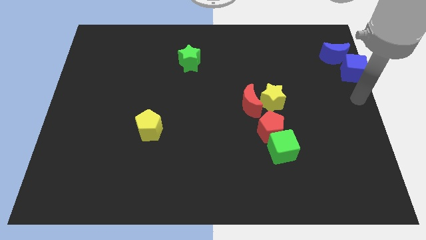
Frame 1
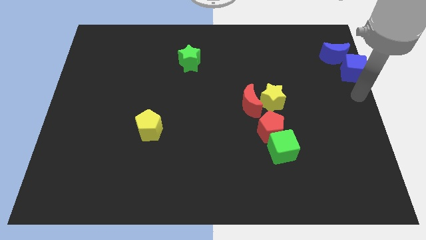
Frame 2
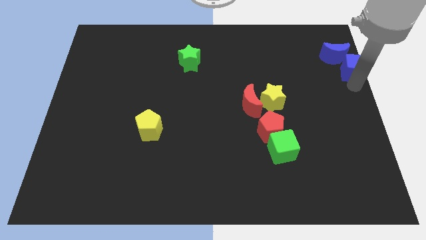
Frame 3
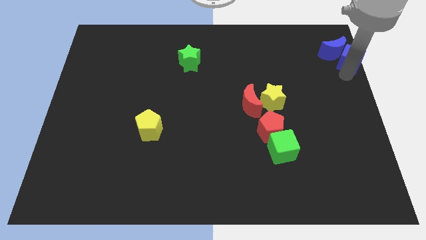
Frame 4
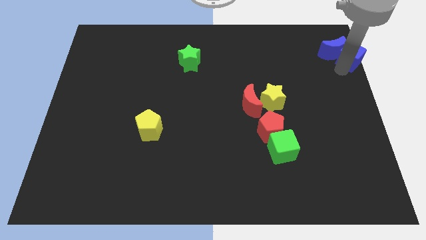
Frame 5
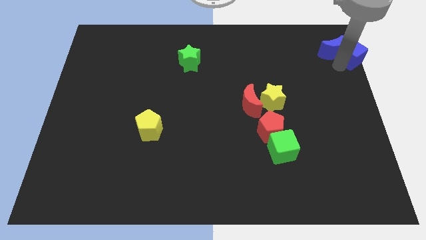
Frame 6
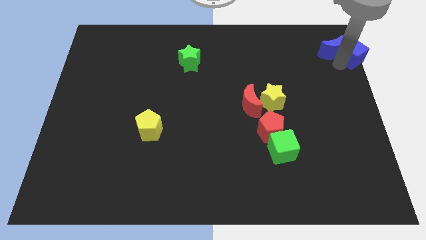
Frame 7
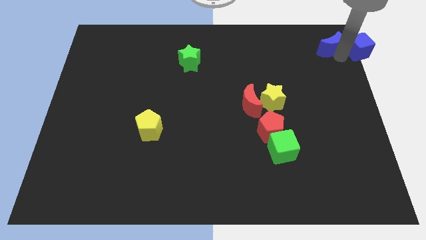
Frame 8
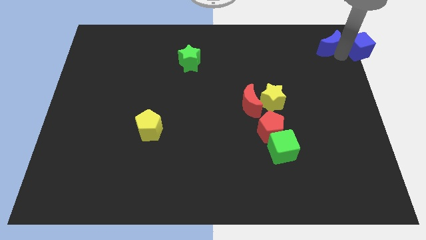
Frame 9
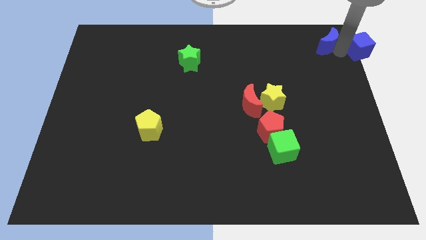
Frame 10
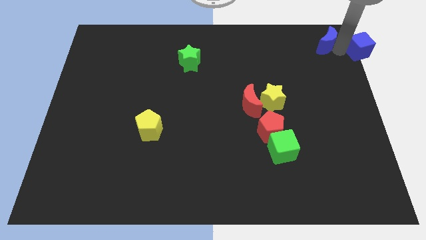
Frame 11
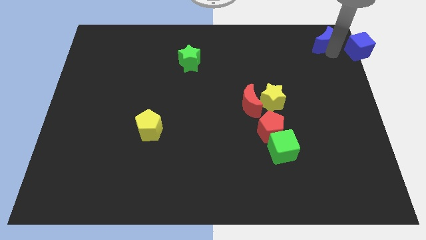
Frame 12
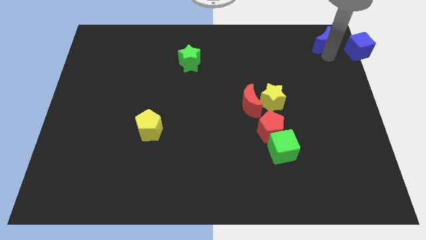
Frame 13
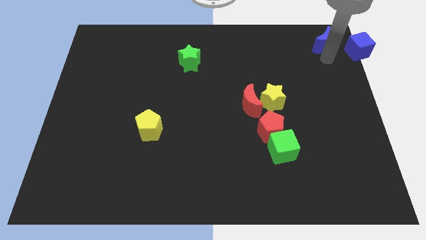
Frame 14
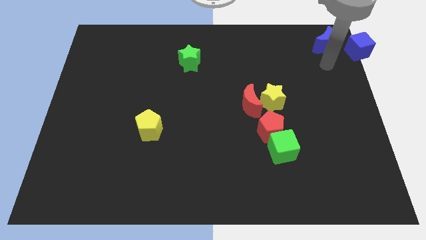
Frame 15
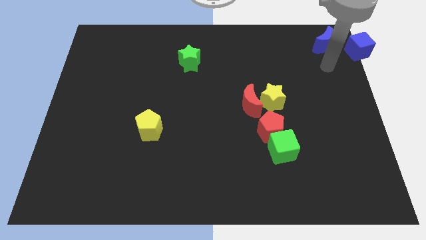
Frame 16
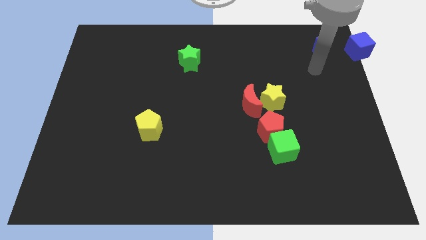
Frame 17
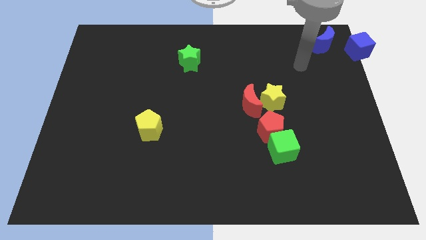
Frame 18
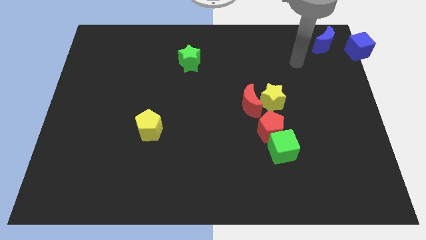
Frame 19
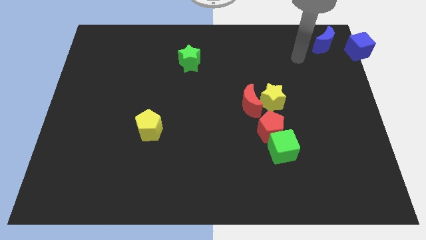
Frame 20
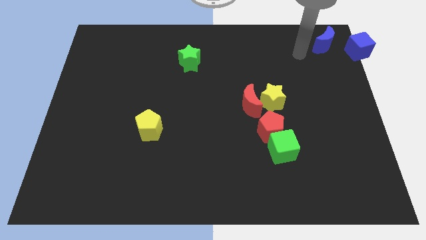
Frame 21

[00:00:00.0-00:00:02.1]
separate the blue moon from the blue cube

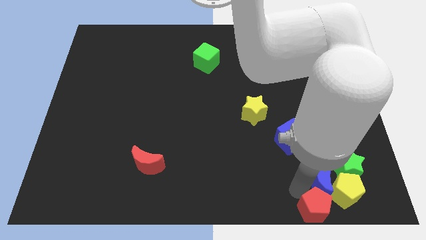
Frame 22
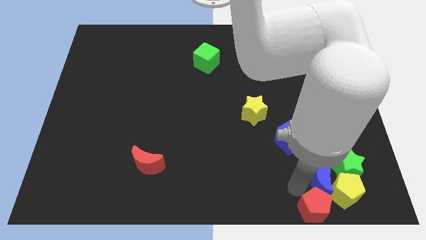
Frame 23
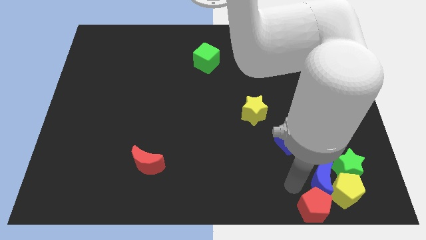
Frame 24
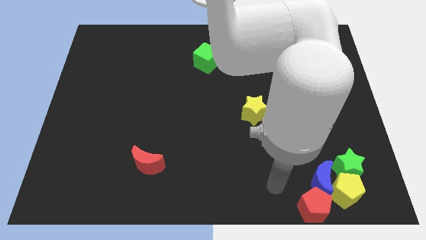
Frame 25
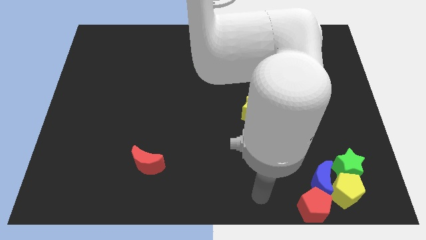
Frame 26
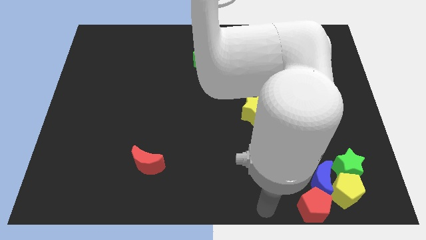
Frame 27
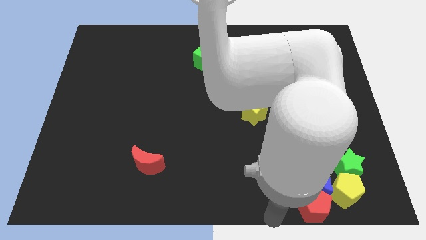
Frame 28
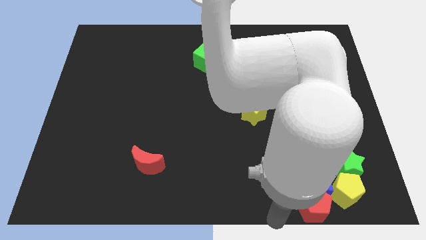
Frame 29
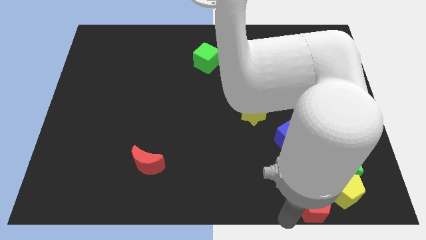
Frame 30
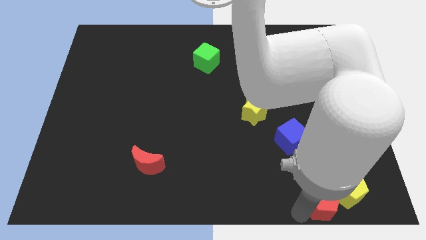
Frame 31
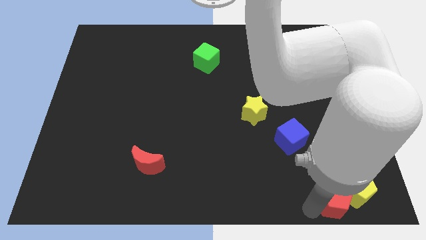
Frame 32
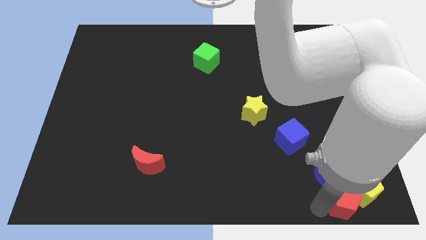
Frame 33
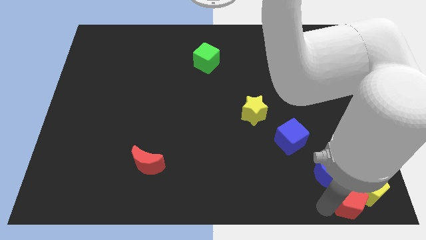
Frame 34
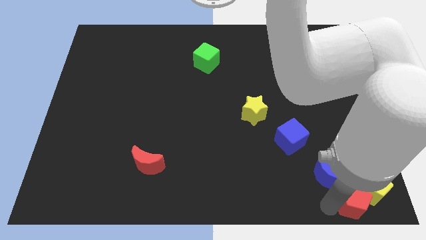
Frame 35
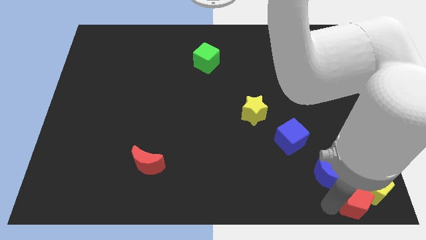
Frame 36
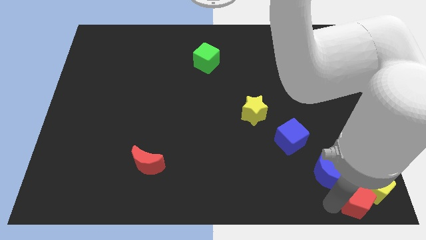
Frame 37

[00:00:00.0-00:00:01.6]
push the red and the yellow pentagon at the bottom right corner

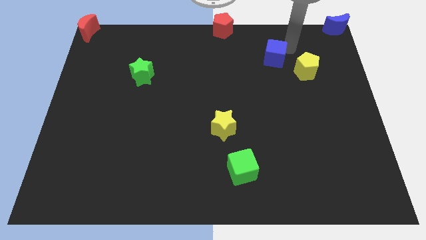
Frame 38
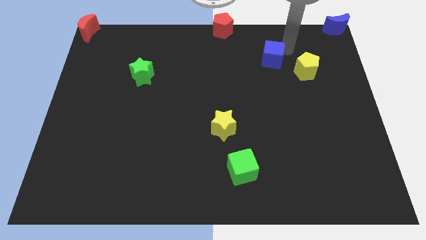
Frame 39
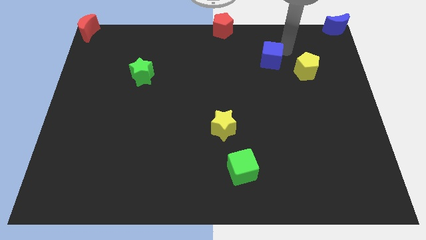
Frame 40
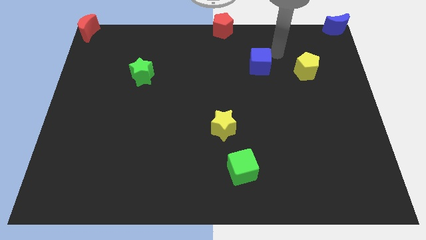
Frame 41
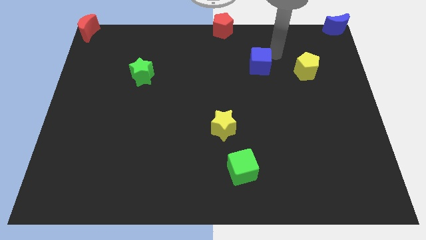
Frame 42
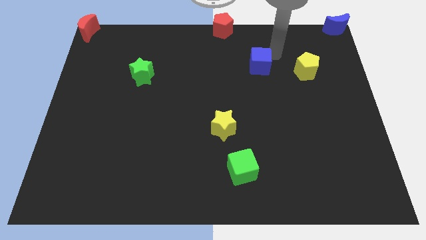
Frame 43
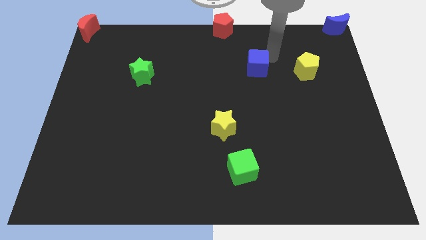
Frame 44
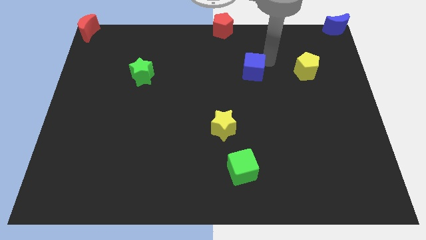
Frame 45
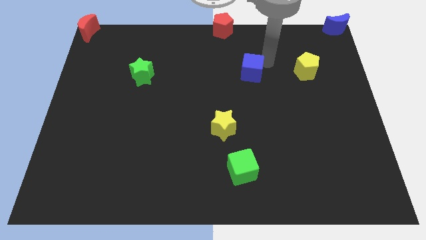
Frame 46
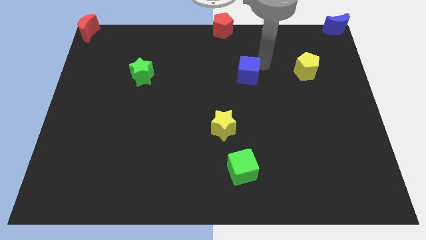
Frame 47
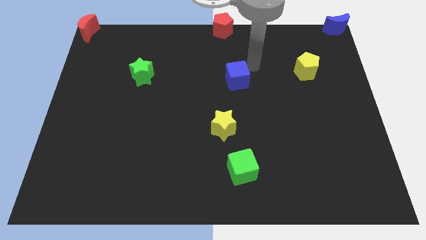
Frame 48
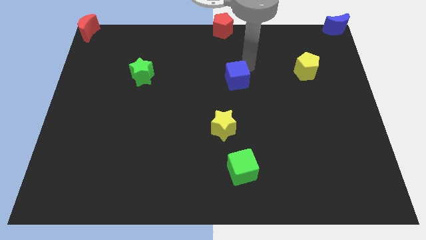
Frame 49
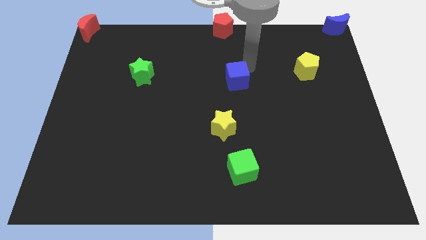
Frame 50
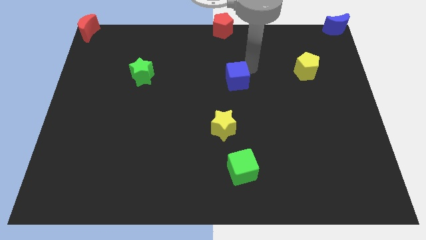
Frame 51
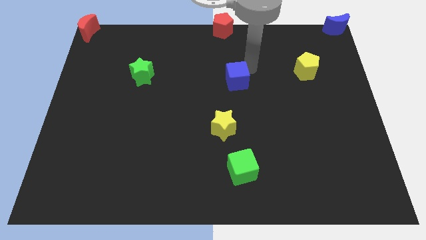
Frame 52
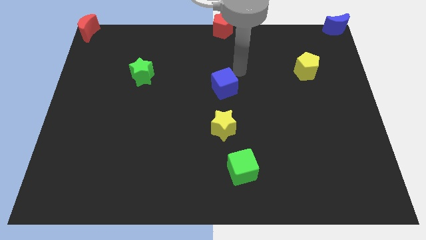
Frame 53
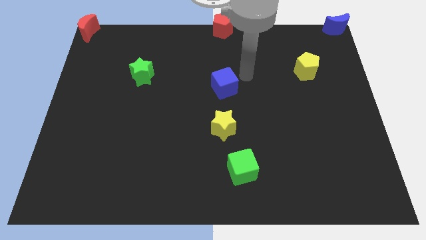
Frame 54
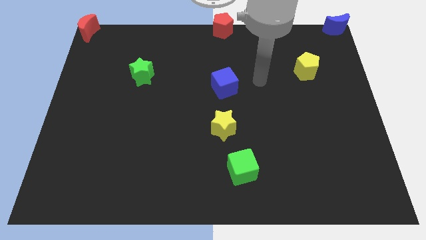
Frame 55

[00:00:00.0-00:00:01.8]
push the blue cube to the top of the yellow star

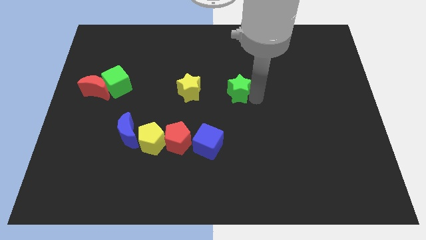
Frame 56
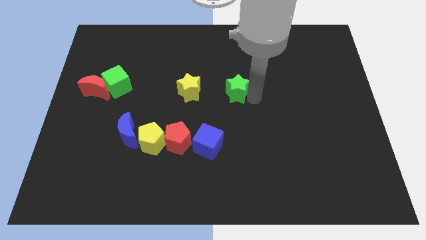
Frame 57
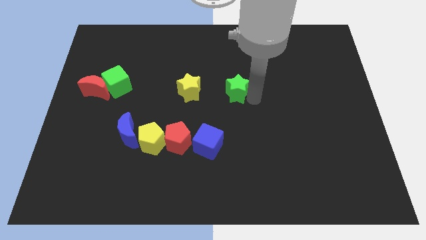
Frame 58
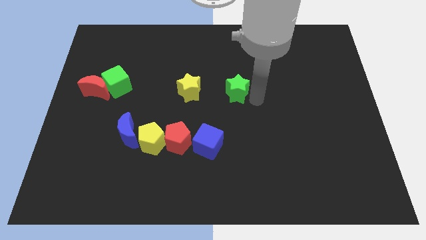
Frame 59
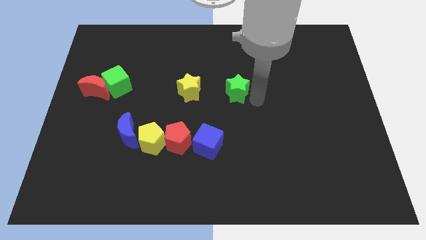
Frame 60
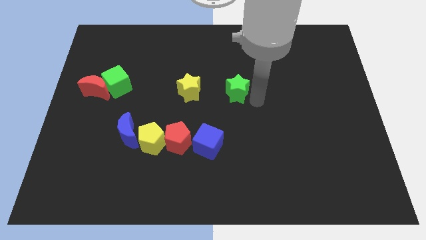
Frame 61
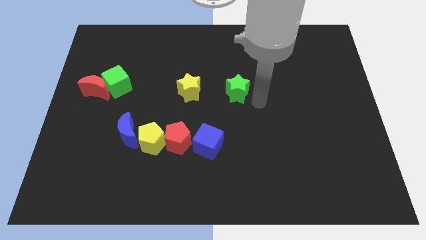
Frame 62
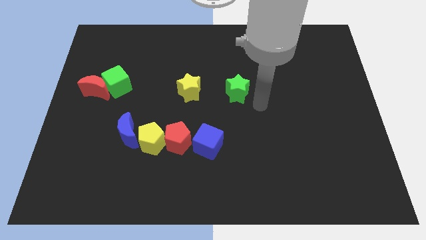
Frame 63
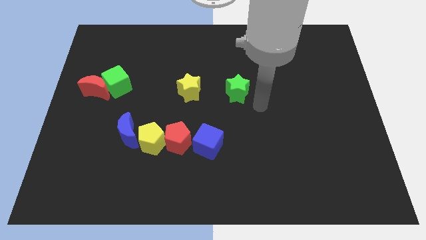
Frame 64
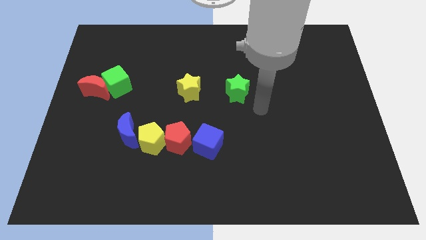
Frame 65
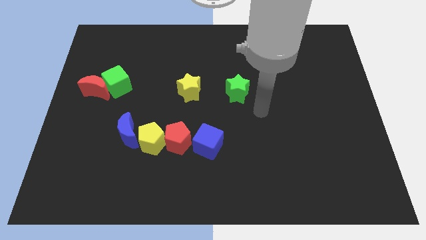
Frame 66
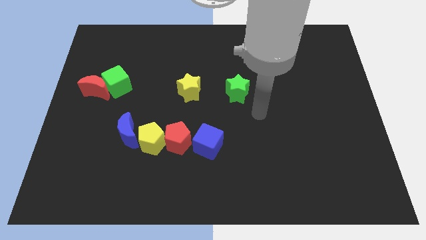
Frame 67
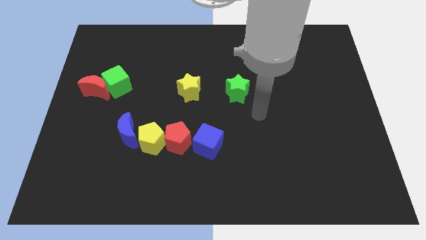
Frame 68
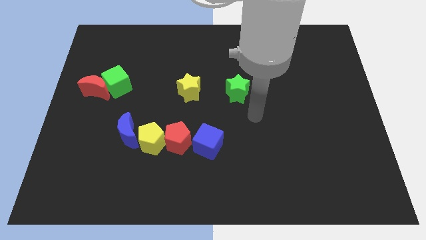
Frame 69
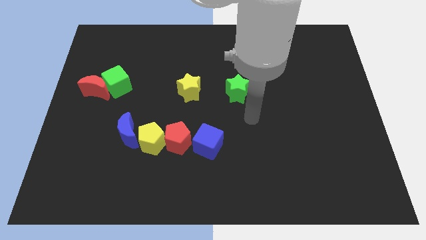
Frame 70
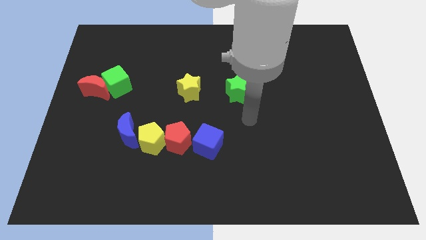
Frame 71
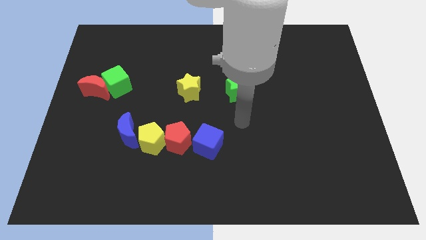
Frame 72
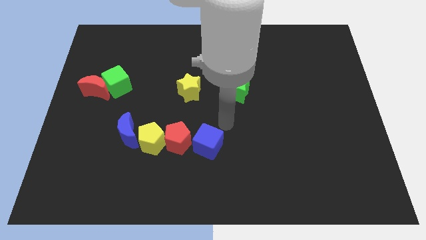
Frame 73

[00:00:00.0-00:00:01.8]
move your arm away from the green star

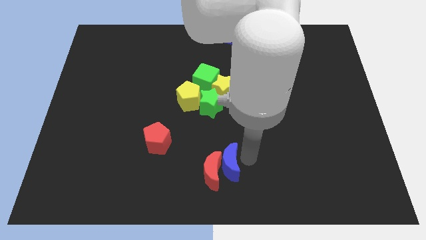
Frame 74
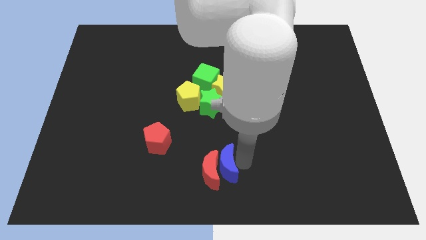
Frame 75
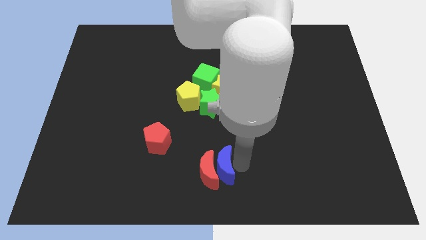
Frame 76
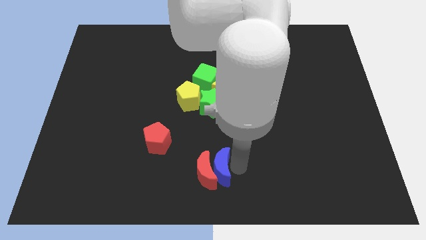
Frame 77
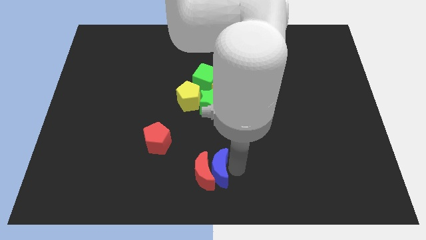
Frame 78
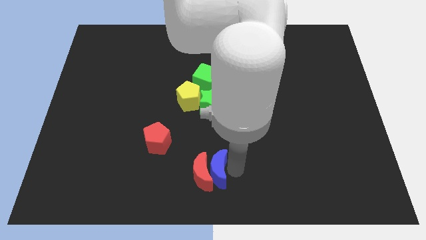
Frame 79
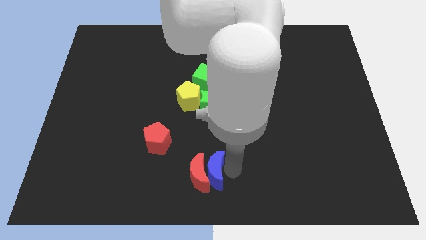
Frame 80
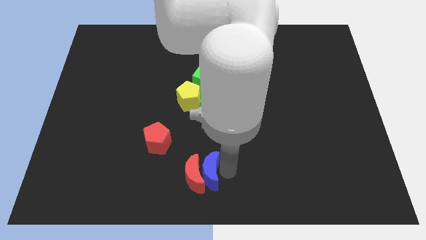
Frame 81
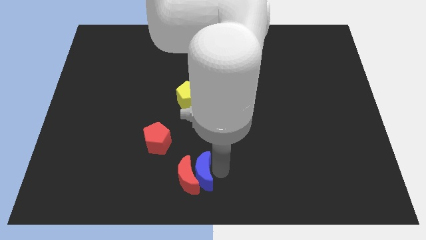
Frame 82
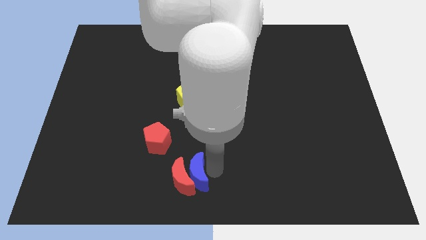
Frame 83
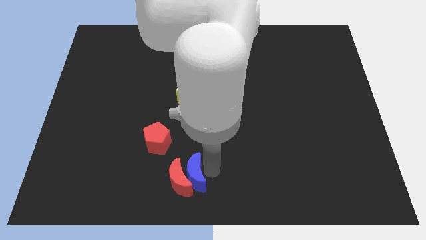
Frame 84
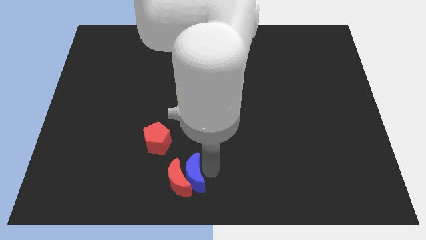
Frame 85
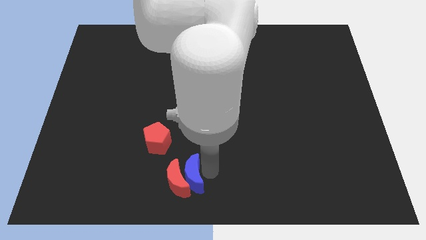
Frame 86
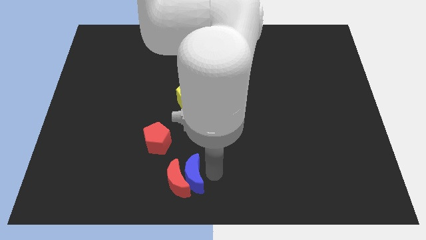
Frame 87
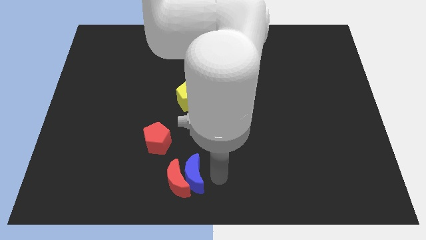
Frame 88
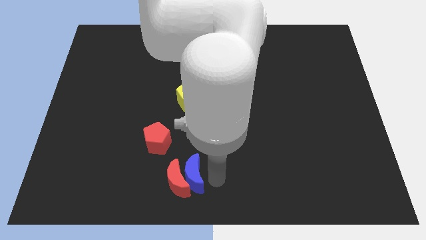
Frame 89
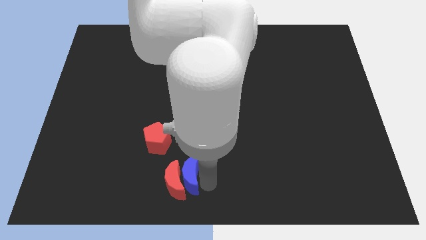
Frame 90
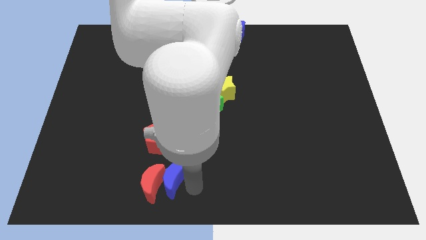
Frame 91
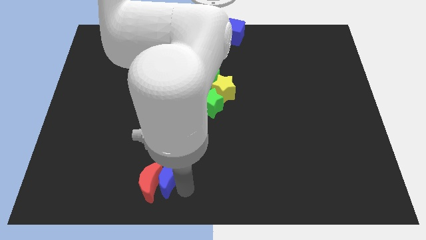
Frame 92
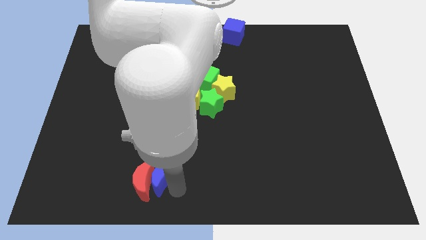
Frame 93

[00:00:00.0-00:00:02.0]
push the red moon with the blue moon to the bottom of the red pentagon
